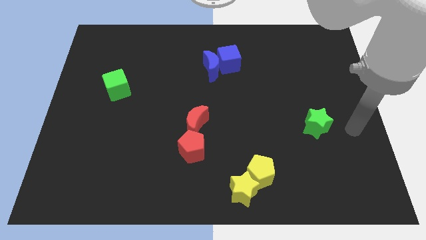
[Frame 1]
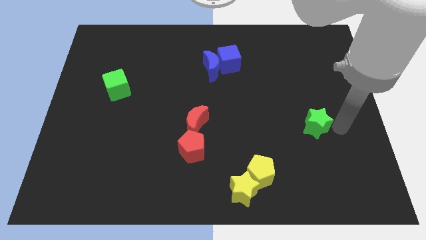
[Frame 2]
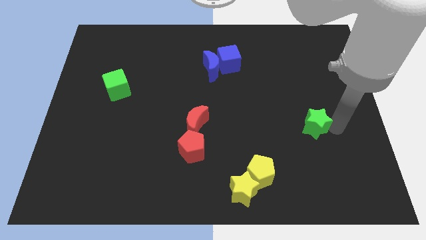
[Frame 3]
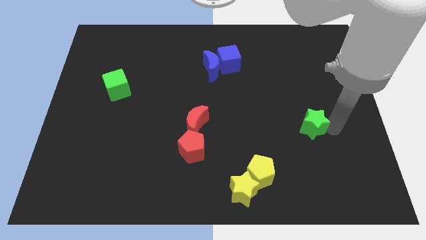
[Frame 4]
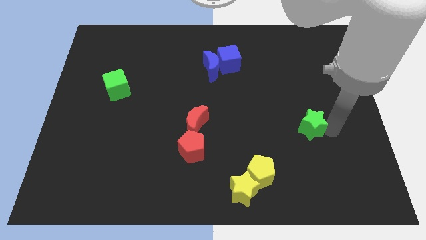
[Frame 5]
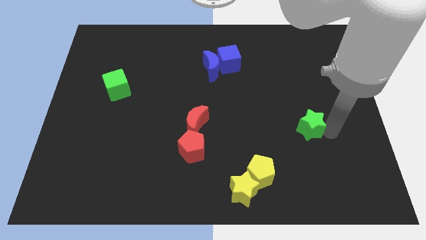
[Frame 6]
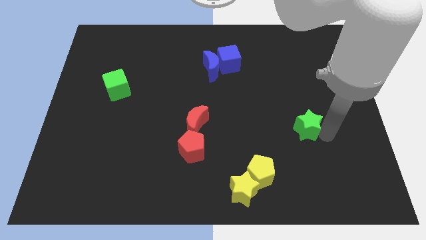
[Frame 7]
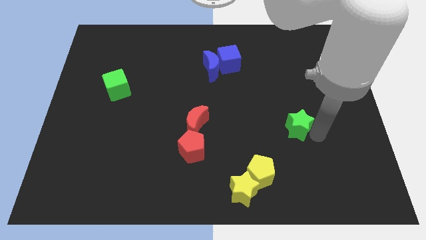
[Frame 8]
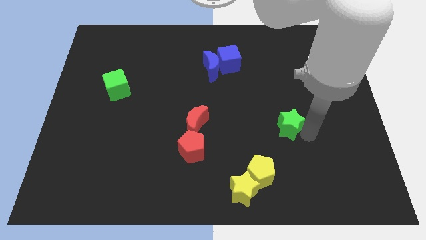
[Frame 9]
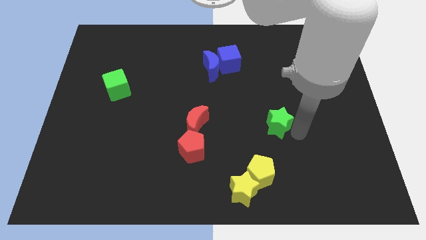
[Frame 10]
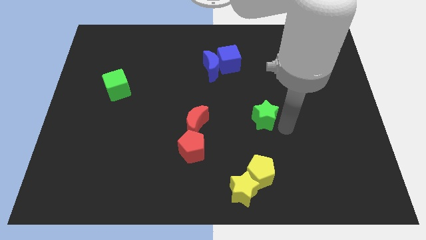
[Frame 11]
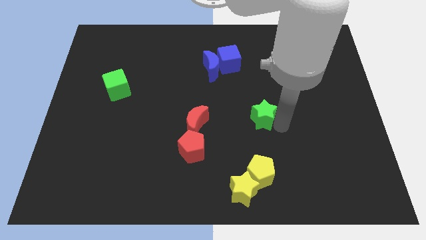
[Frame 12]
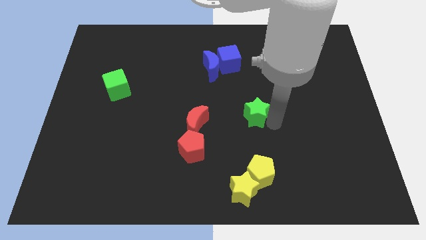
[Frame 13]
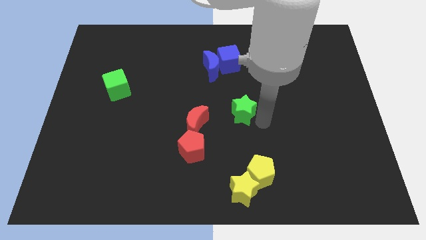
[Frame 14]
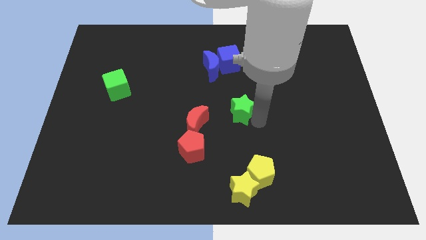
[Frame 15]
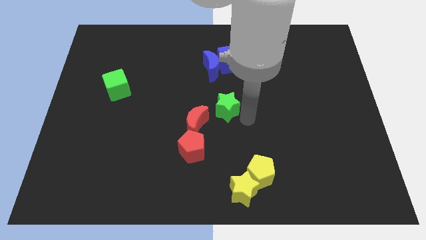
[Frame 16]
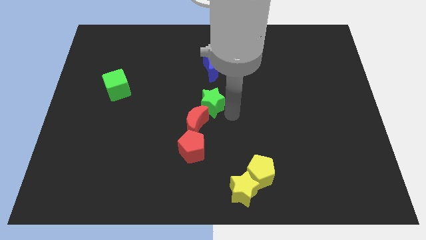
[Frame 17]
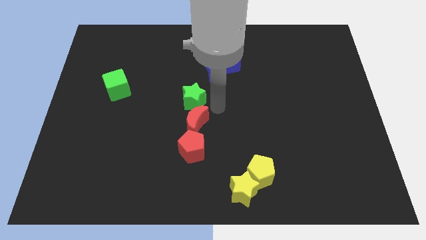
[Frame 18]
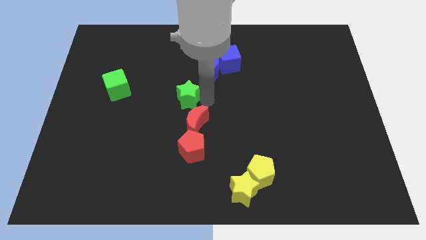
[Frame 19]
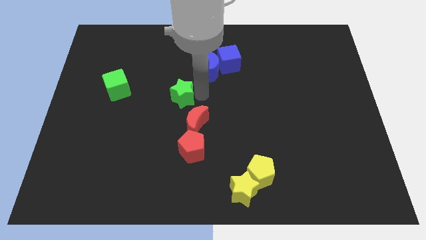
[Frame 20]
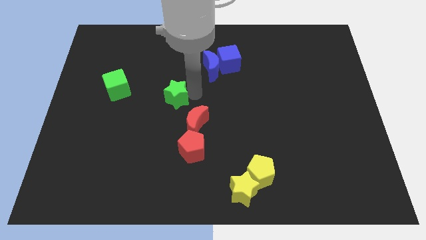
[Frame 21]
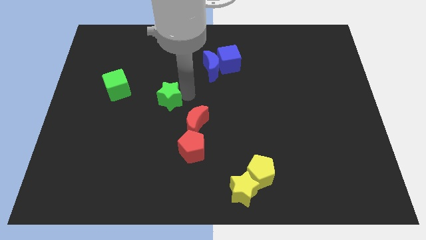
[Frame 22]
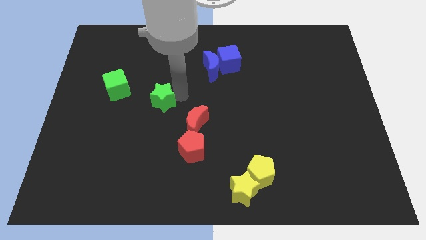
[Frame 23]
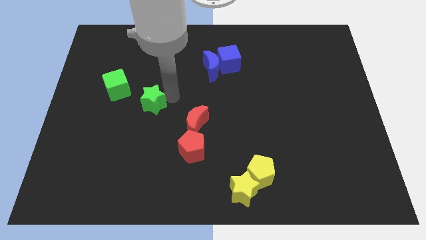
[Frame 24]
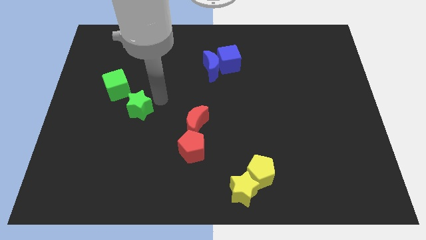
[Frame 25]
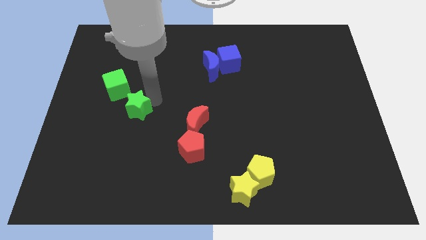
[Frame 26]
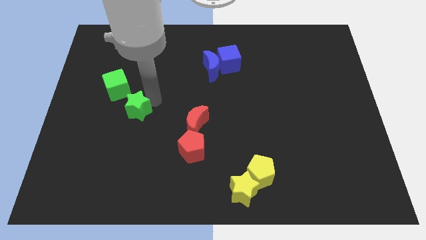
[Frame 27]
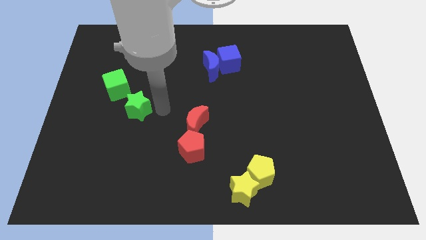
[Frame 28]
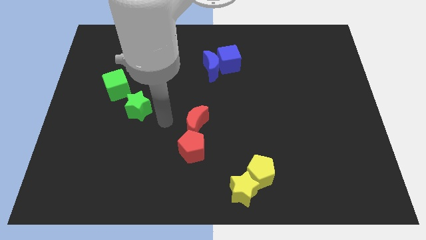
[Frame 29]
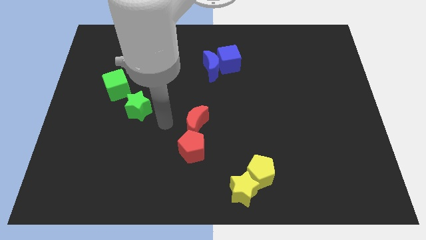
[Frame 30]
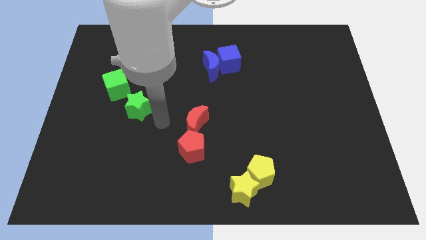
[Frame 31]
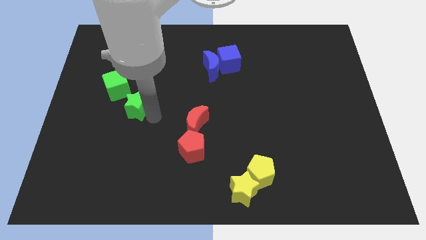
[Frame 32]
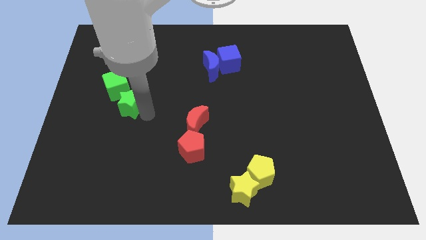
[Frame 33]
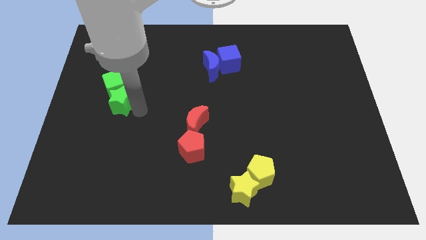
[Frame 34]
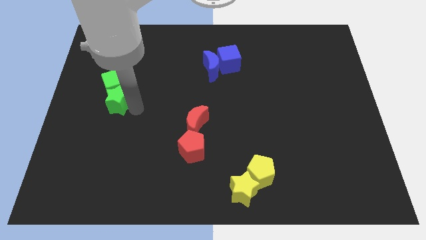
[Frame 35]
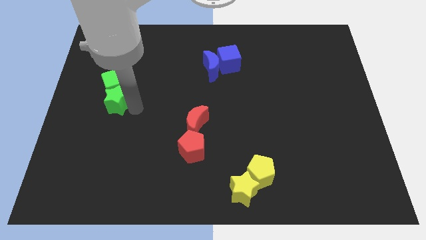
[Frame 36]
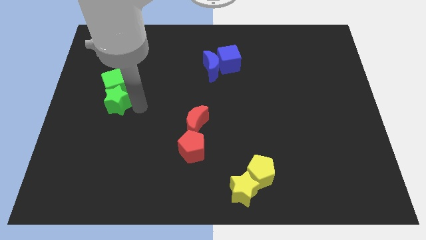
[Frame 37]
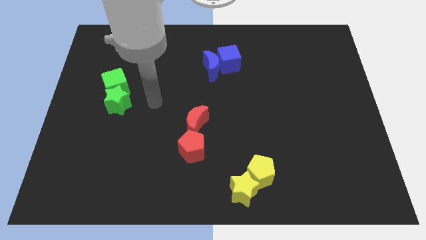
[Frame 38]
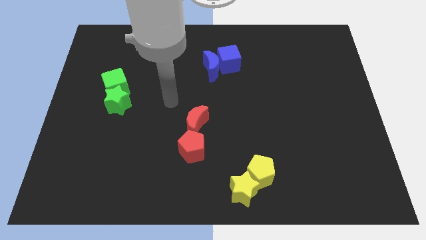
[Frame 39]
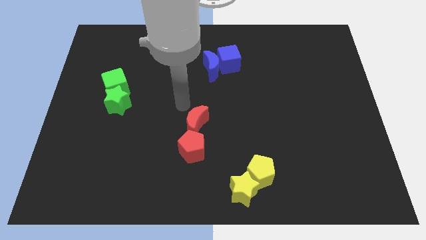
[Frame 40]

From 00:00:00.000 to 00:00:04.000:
push the green star into the green cube

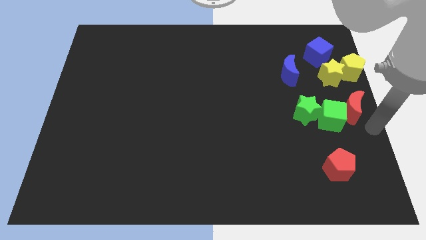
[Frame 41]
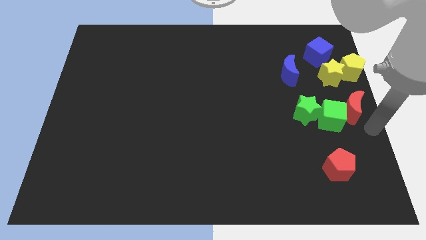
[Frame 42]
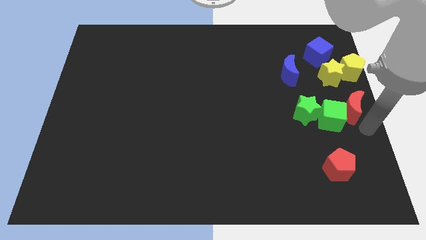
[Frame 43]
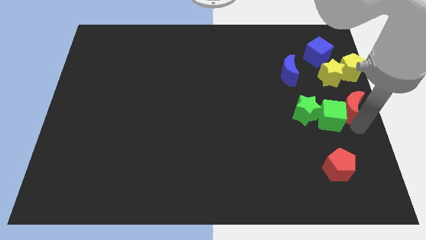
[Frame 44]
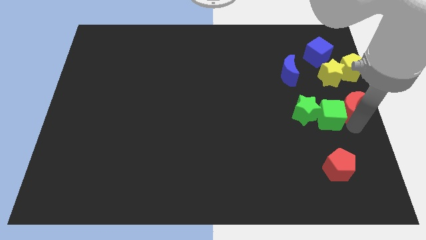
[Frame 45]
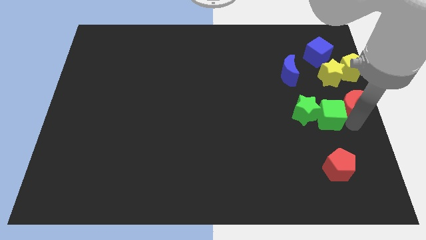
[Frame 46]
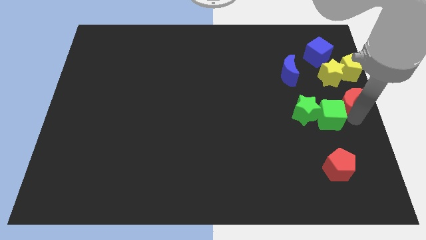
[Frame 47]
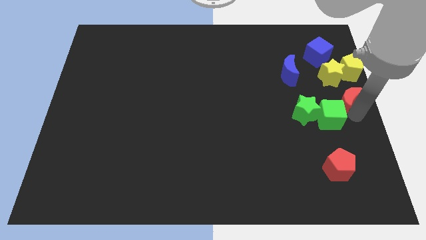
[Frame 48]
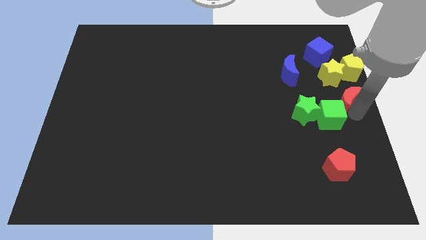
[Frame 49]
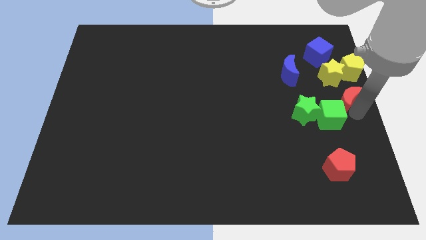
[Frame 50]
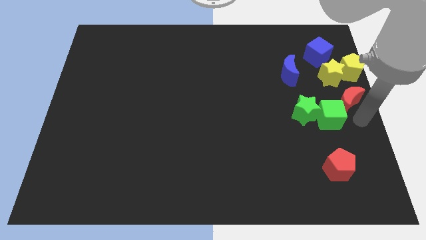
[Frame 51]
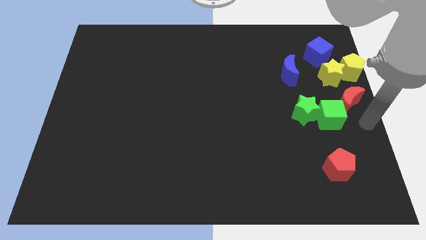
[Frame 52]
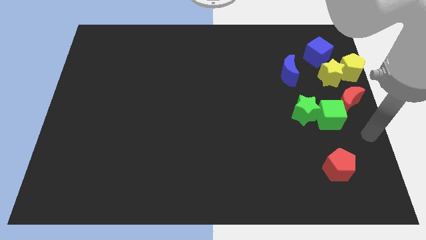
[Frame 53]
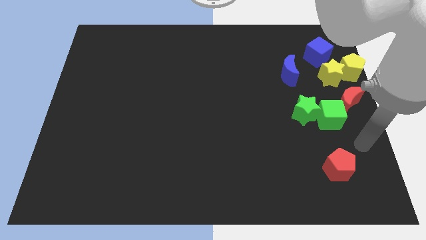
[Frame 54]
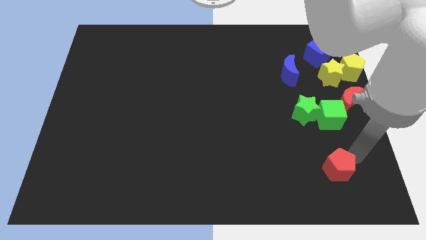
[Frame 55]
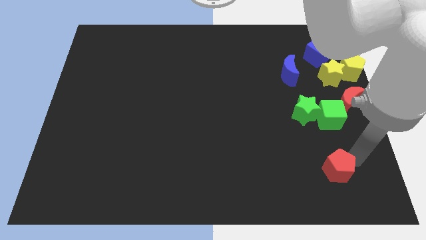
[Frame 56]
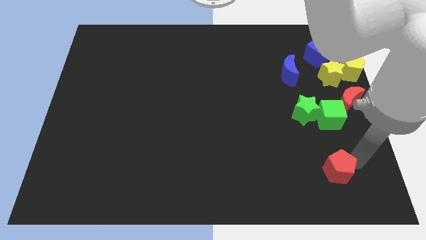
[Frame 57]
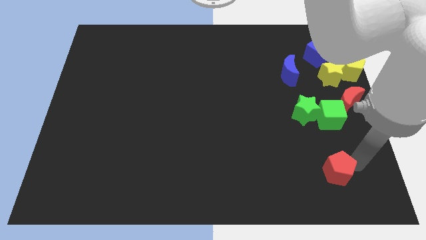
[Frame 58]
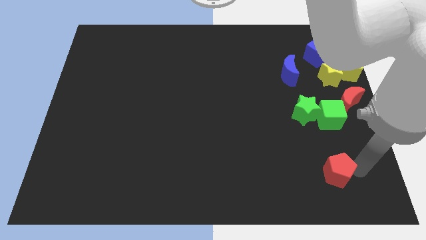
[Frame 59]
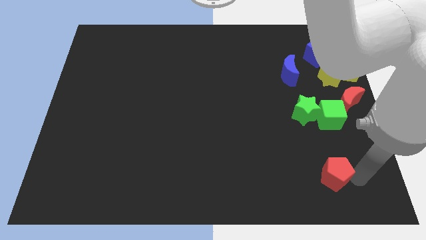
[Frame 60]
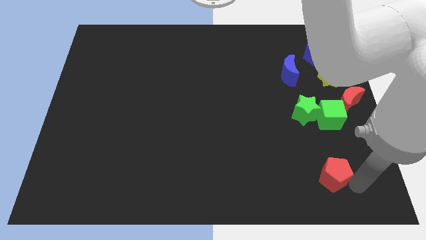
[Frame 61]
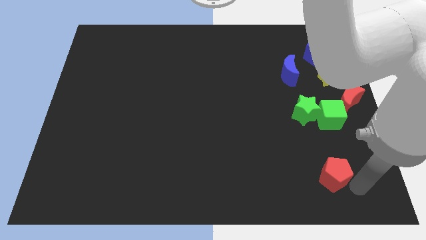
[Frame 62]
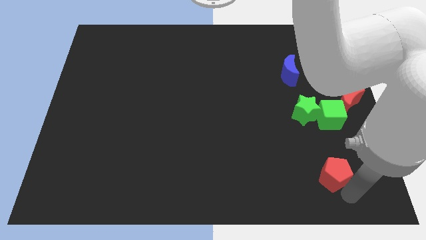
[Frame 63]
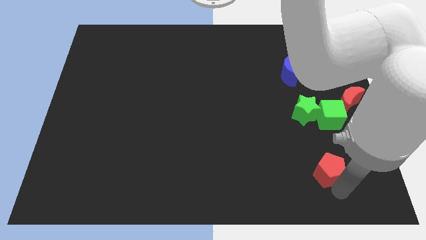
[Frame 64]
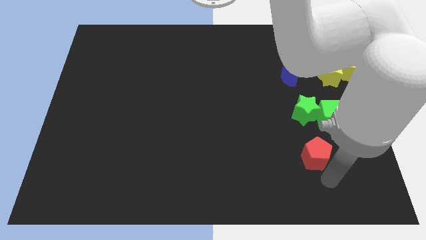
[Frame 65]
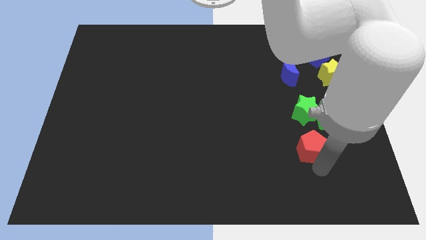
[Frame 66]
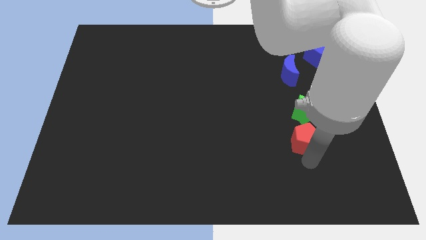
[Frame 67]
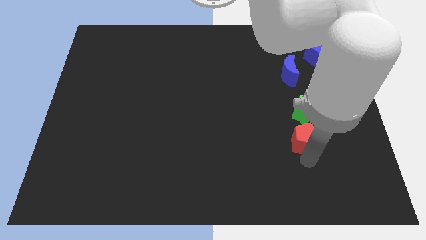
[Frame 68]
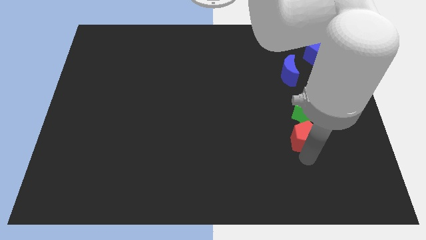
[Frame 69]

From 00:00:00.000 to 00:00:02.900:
place red pentagon below green star

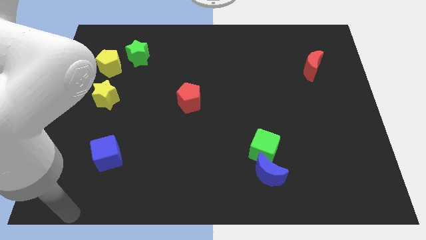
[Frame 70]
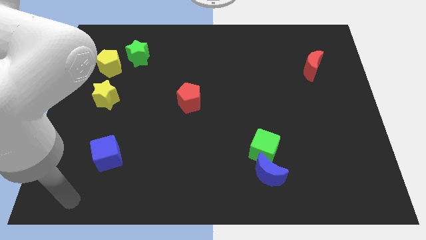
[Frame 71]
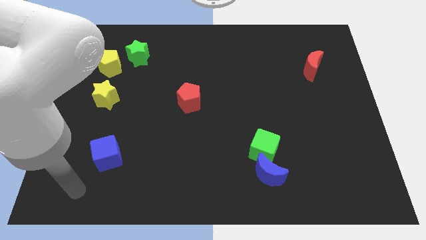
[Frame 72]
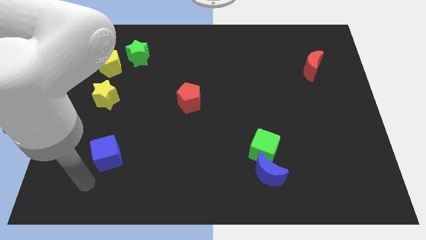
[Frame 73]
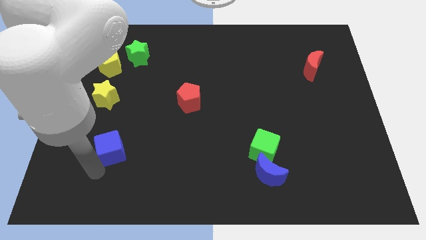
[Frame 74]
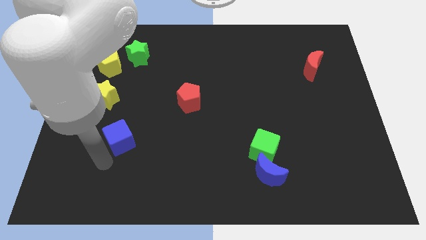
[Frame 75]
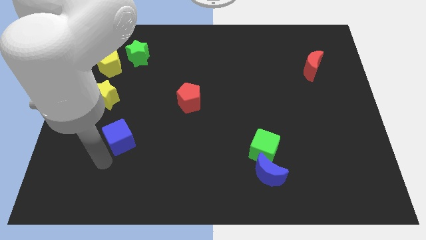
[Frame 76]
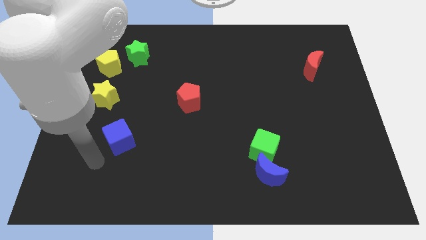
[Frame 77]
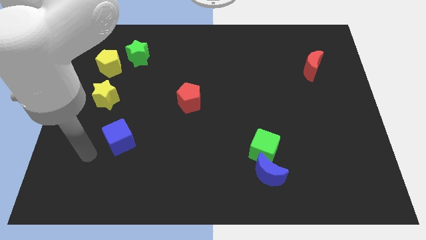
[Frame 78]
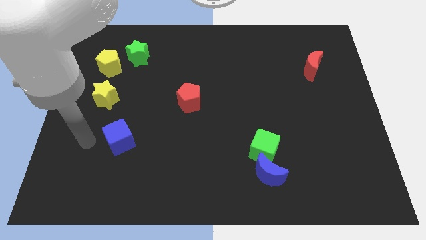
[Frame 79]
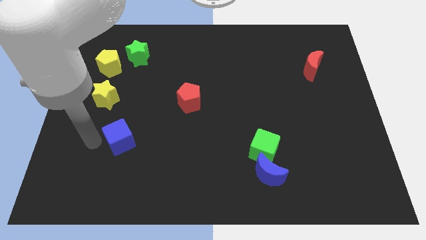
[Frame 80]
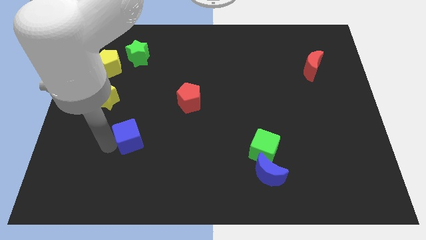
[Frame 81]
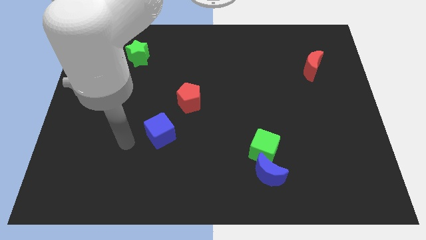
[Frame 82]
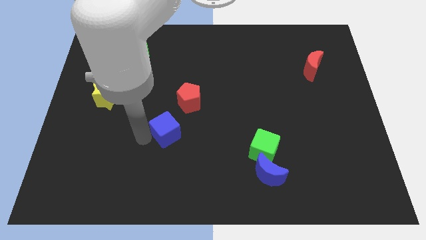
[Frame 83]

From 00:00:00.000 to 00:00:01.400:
place the blue moon diagonallay bottom left to the red pentagon

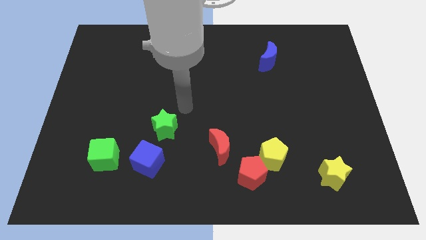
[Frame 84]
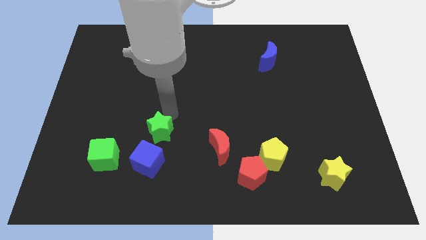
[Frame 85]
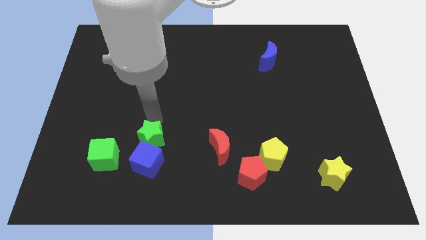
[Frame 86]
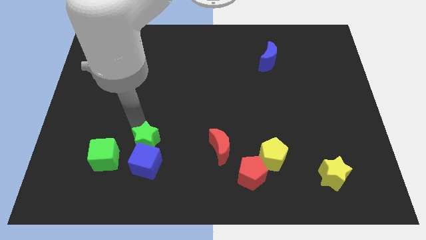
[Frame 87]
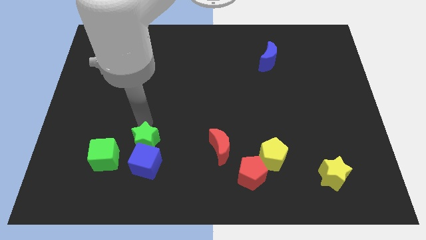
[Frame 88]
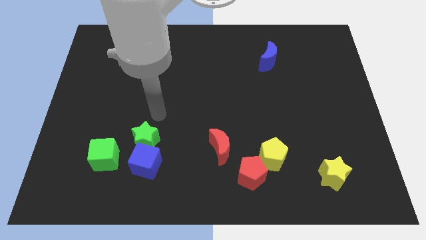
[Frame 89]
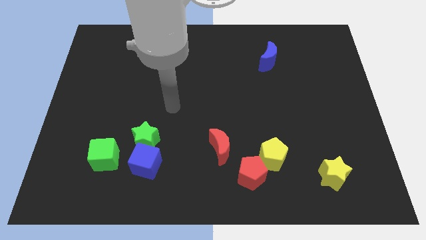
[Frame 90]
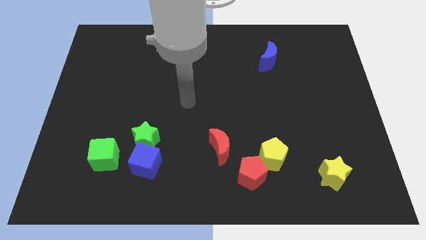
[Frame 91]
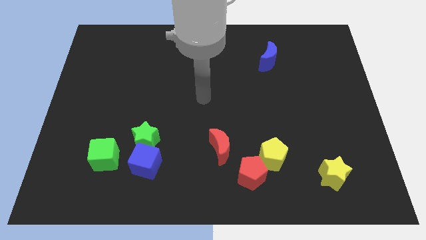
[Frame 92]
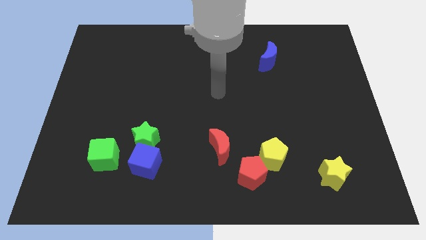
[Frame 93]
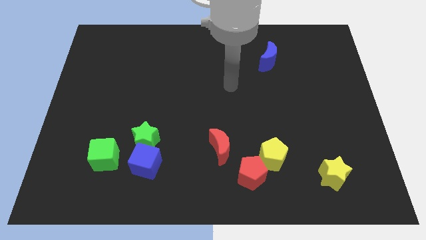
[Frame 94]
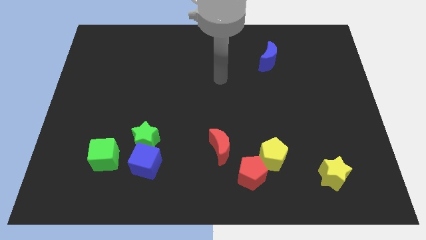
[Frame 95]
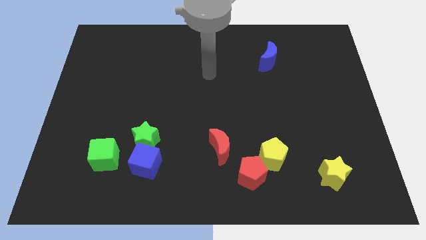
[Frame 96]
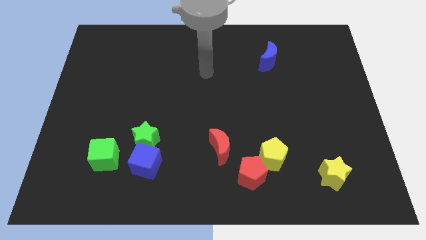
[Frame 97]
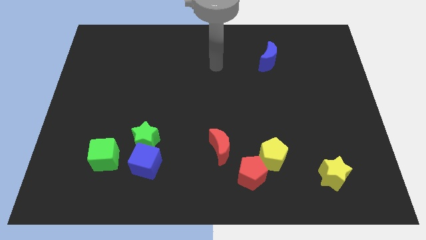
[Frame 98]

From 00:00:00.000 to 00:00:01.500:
push the green star into the blue cube and go away
